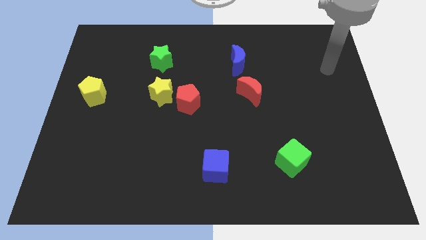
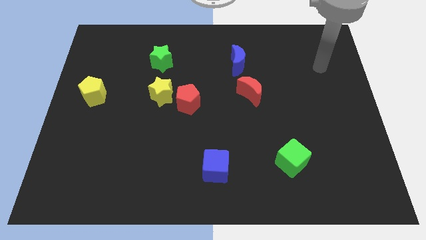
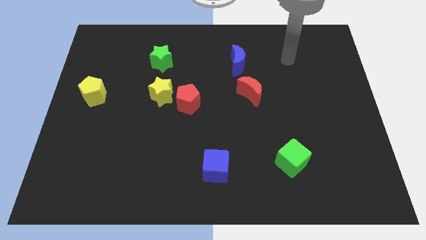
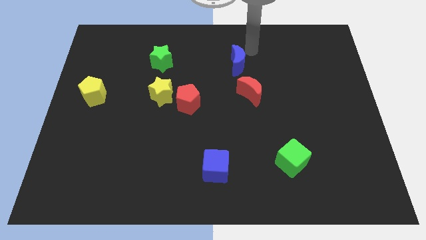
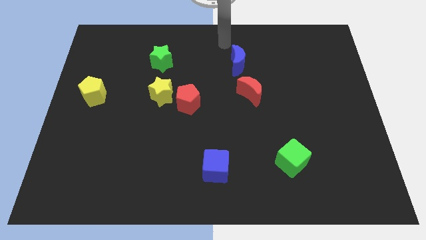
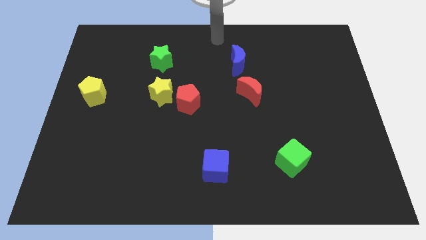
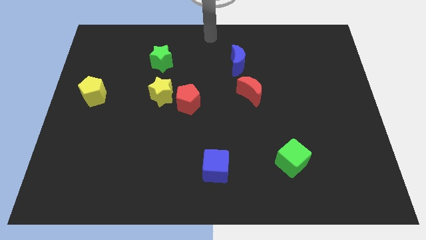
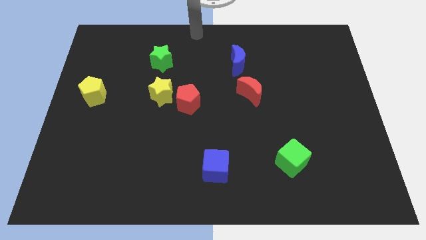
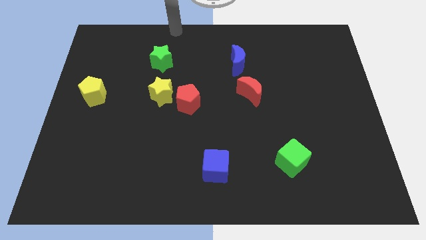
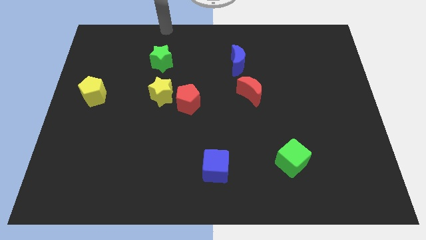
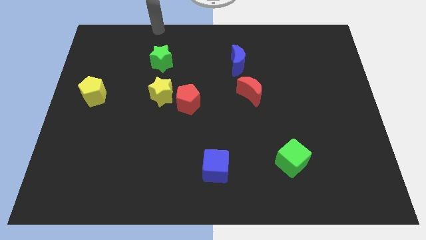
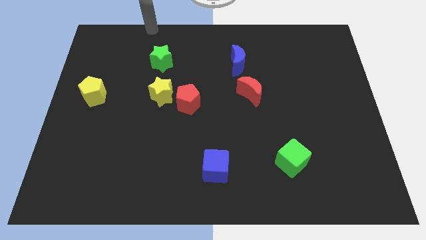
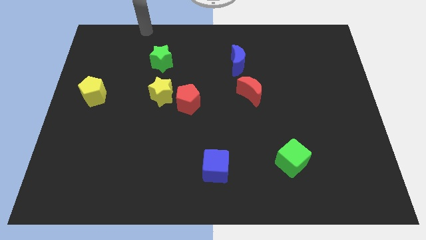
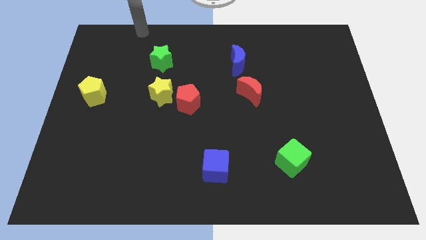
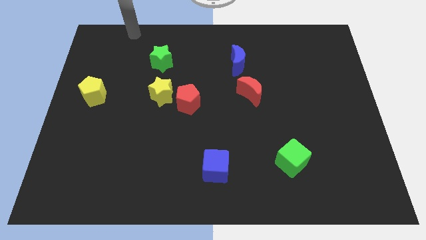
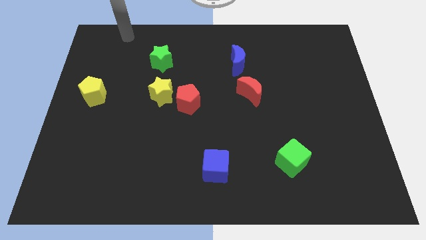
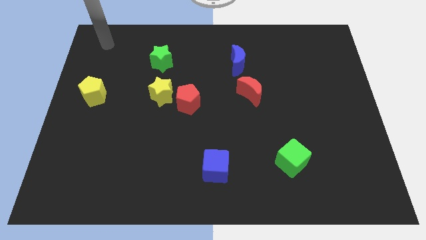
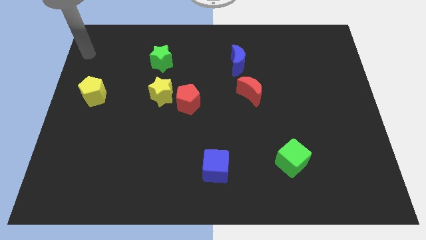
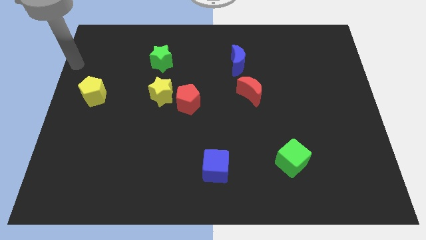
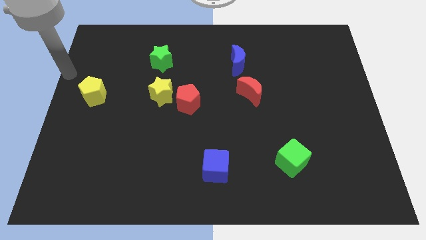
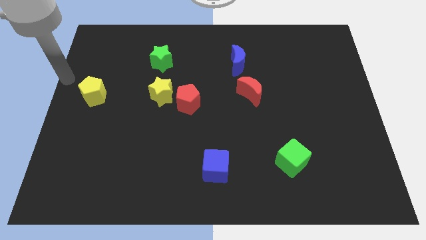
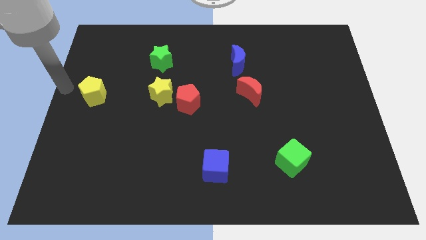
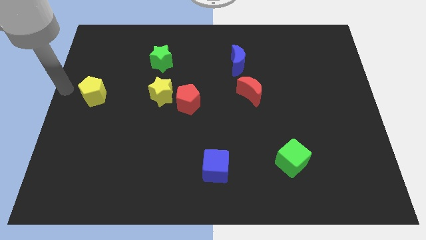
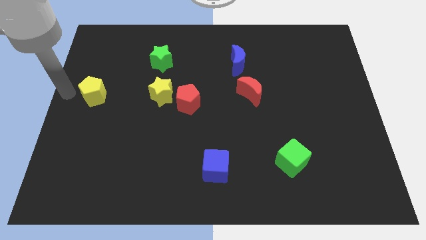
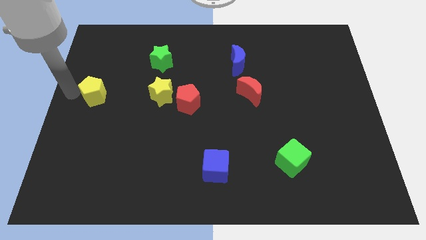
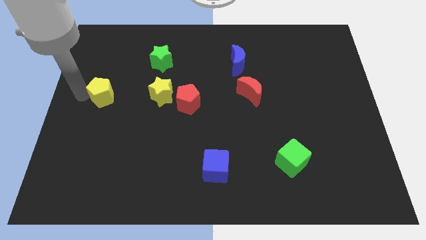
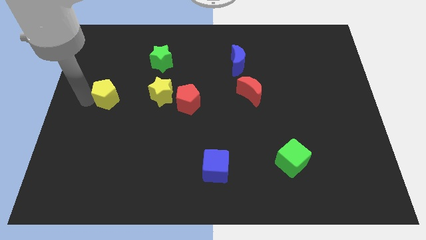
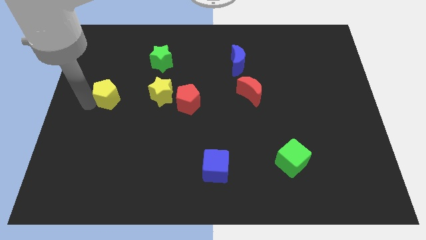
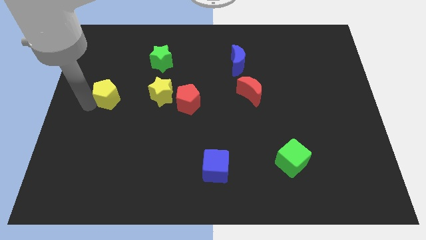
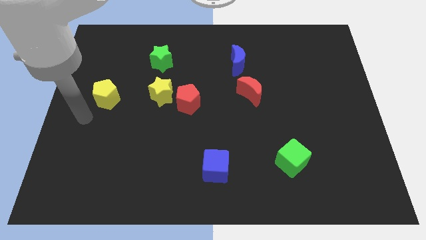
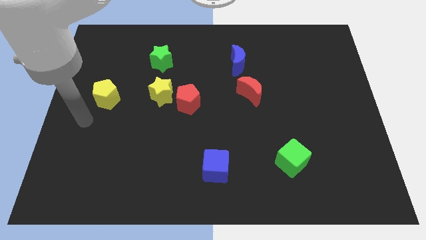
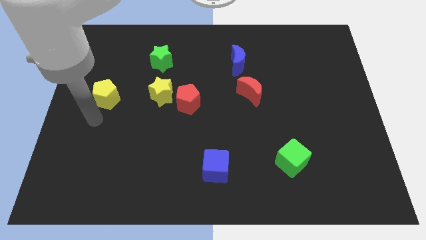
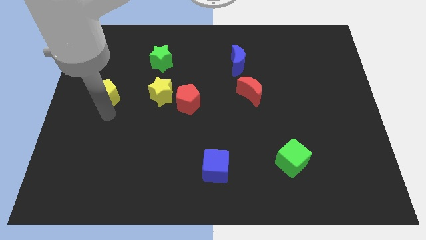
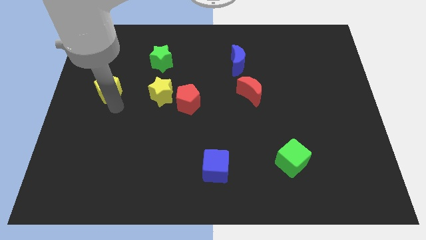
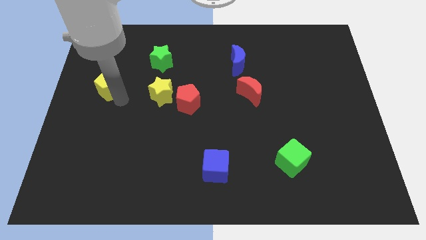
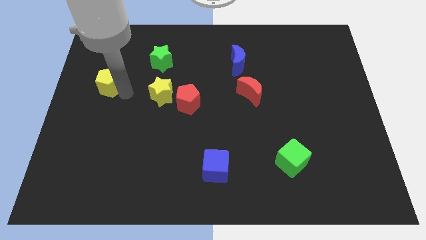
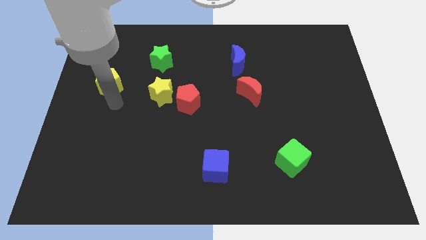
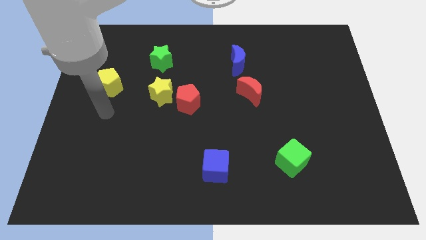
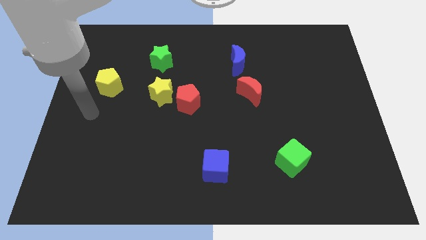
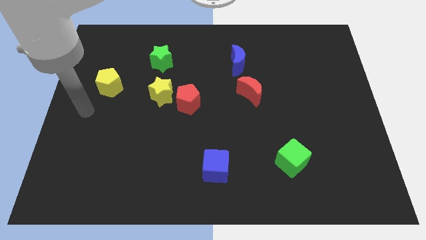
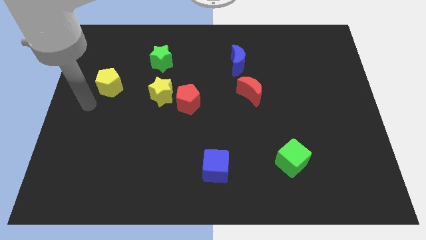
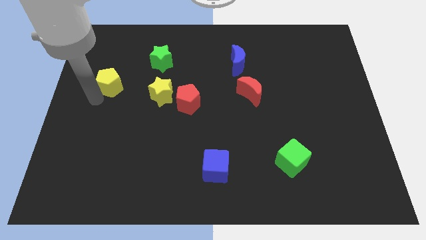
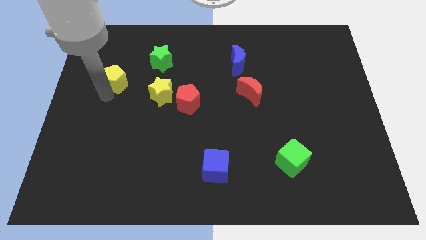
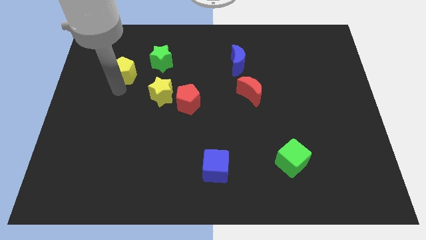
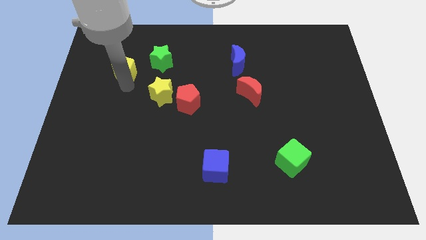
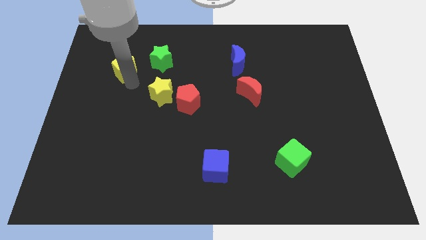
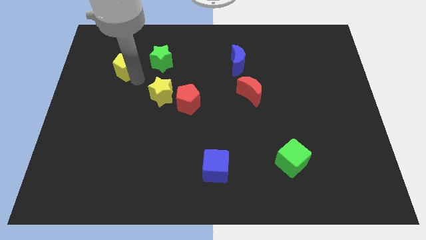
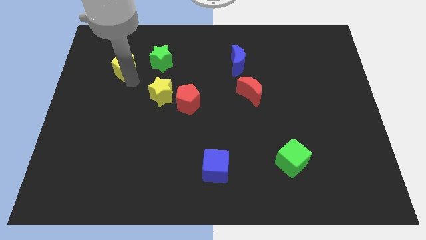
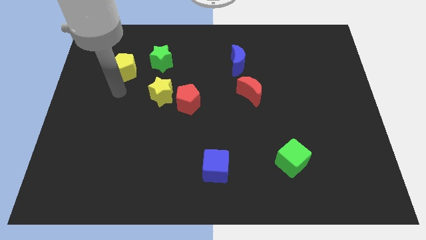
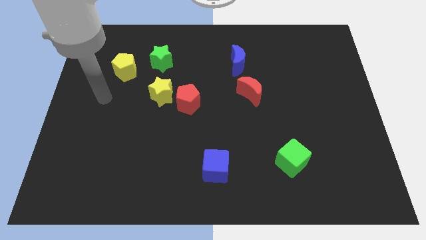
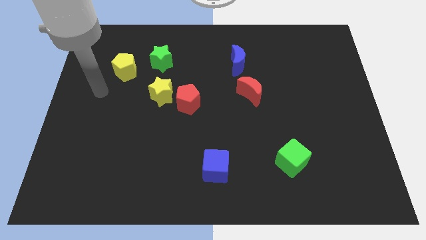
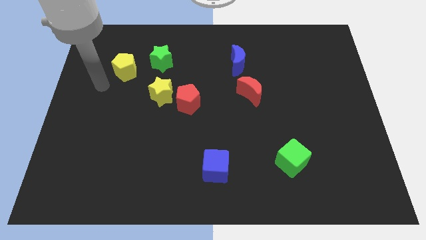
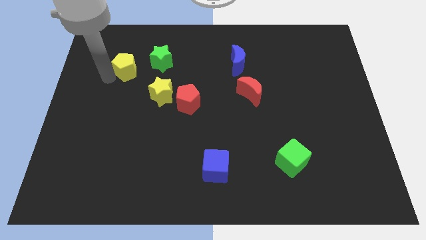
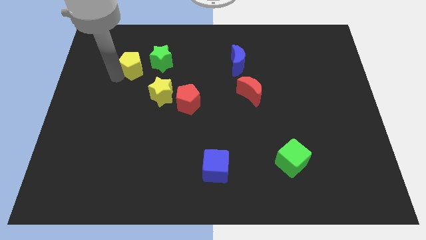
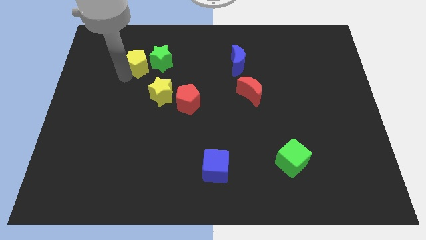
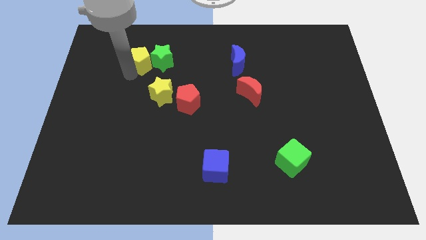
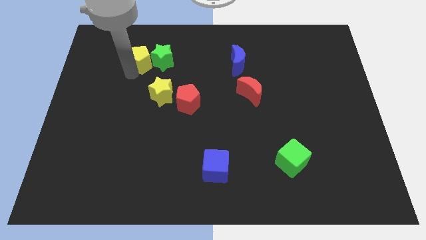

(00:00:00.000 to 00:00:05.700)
push the yellow pentagon to the green star

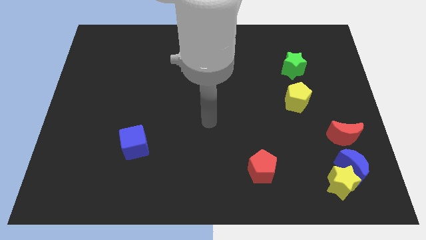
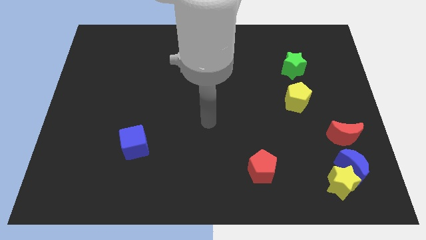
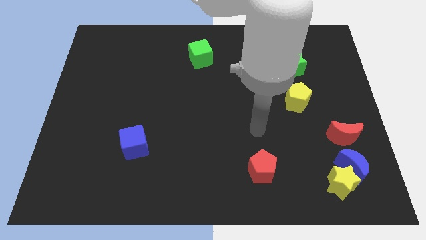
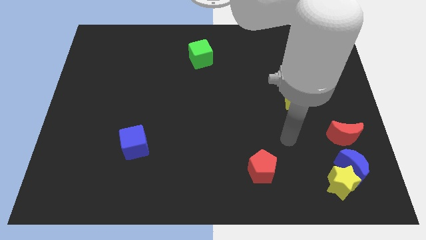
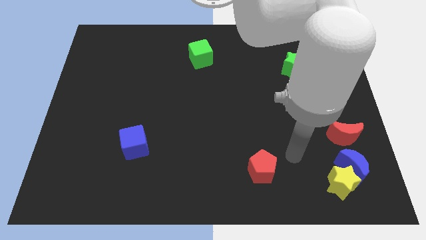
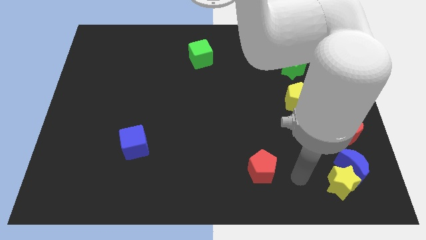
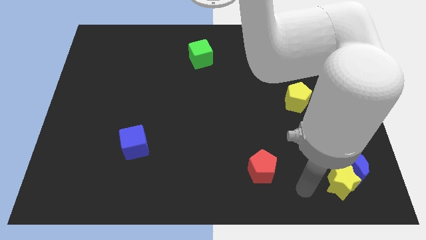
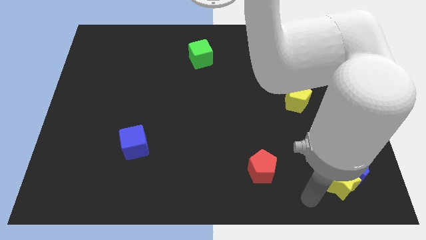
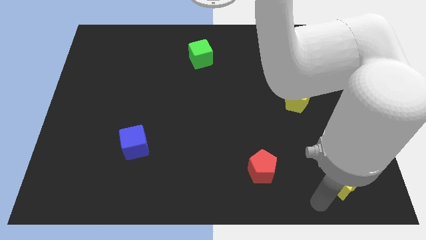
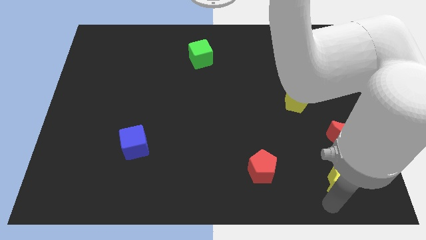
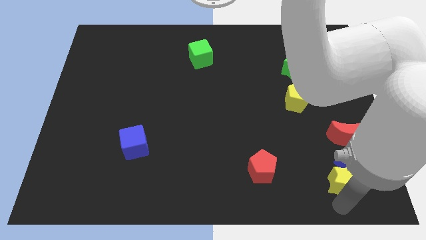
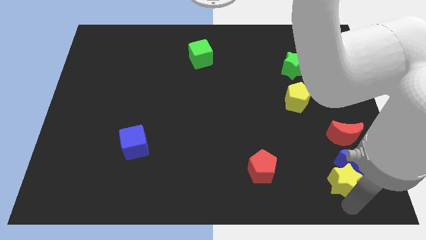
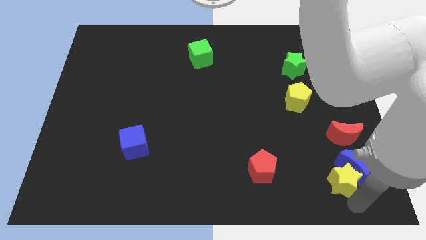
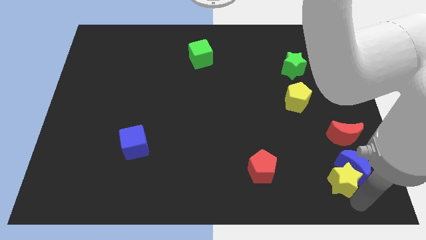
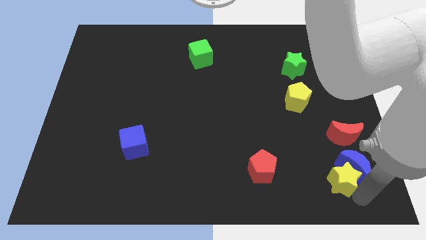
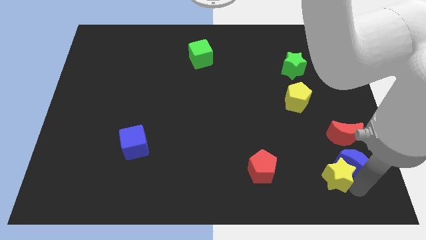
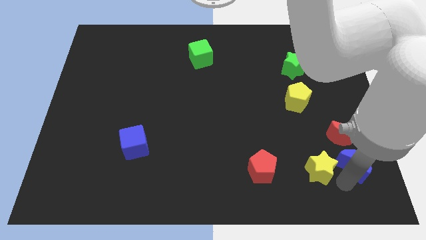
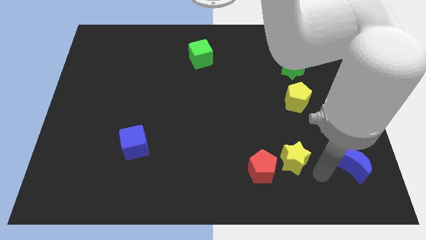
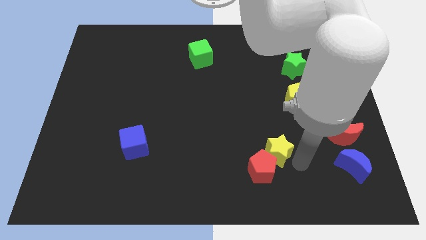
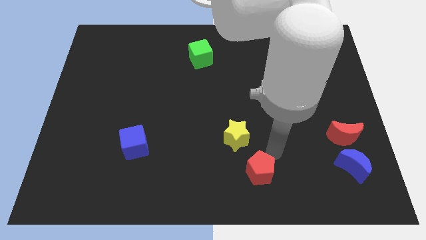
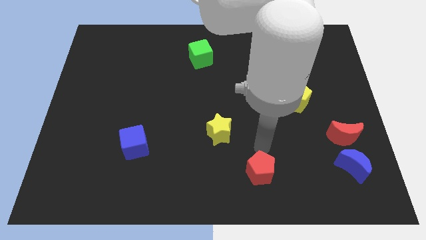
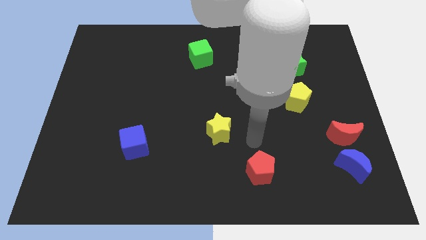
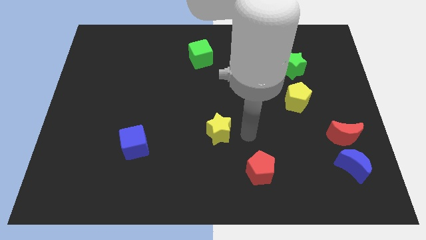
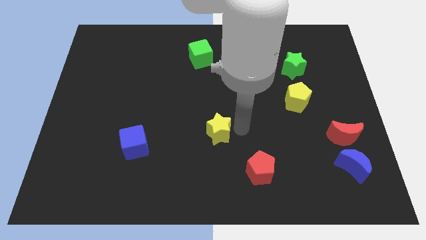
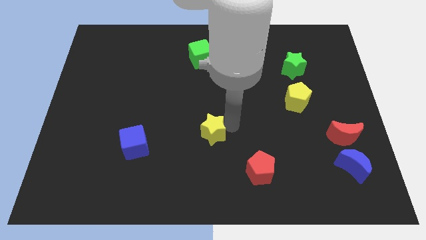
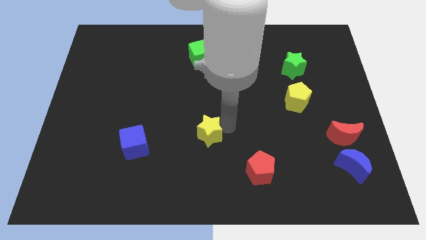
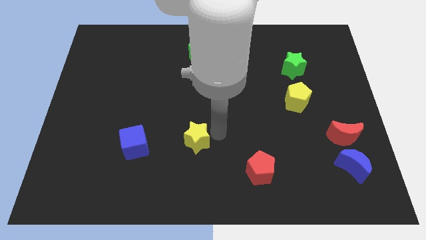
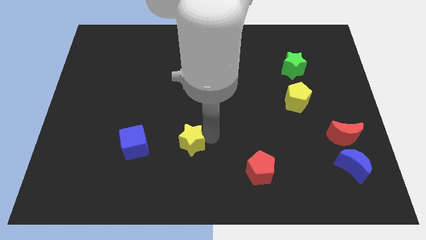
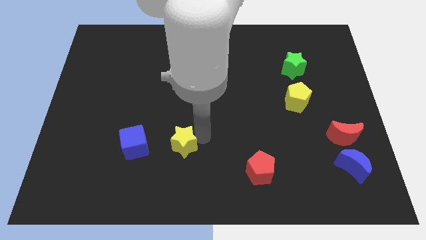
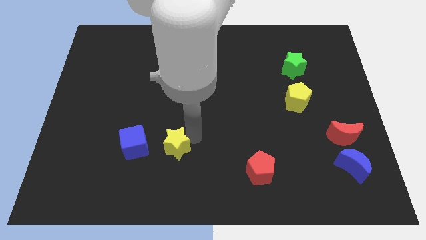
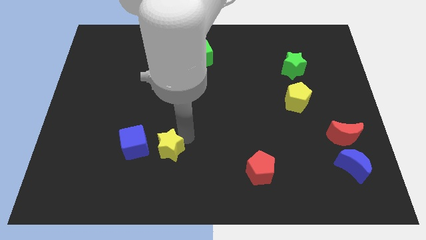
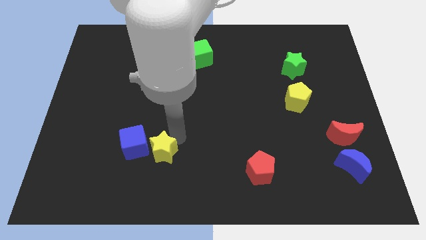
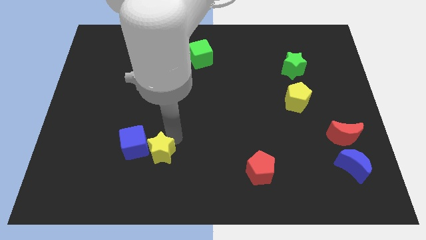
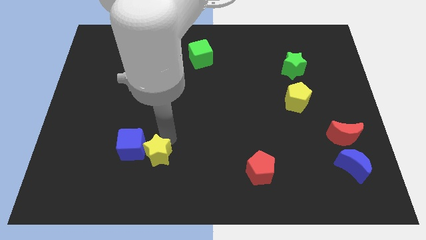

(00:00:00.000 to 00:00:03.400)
slide the yellow star to the blue cube
